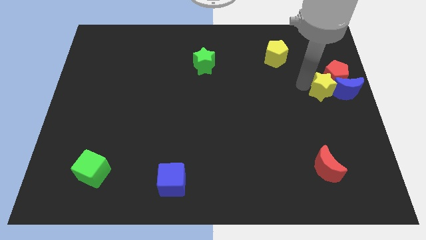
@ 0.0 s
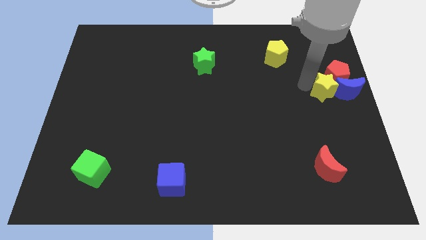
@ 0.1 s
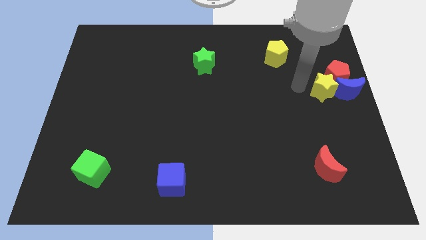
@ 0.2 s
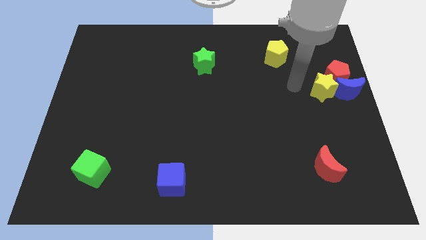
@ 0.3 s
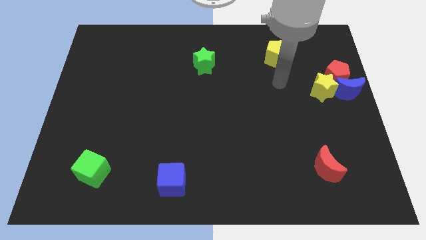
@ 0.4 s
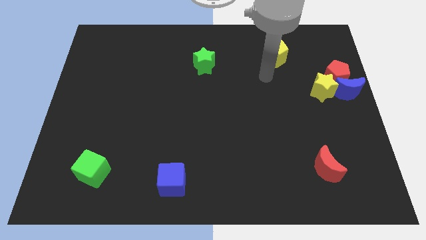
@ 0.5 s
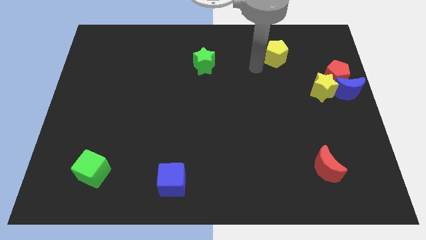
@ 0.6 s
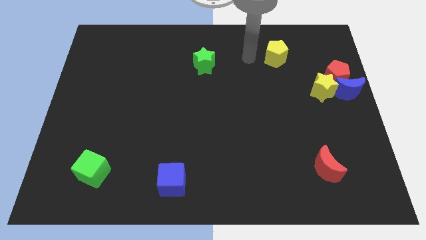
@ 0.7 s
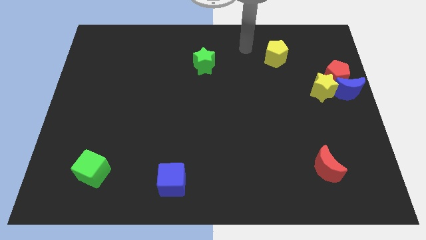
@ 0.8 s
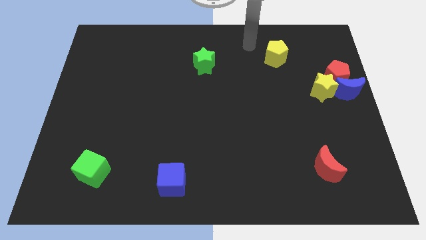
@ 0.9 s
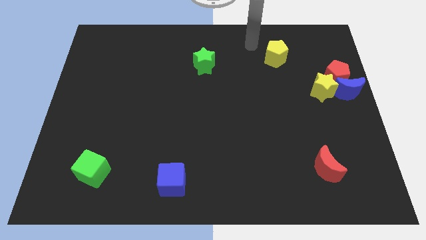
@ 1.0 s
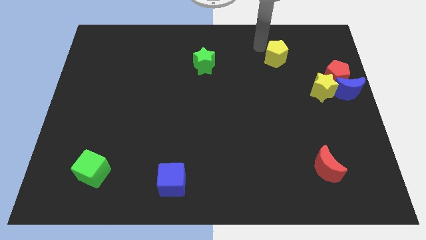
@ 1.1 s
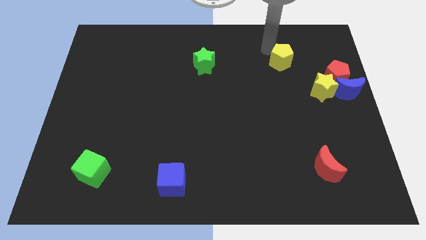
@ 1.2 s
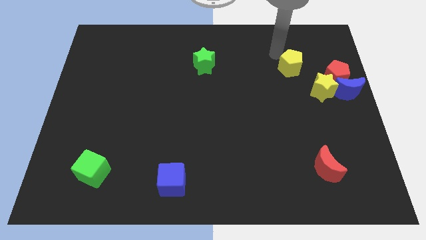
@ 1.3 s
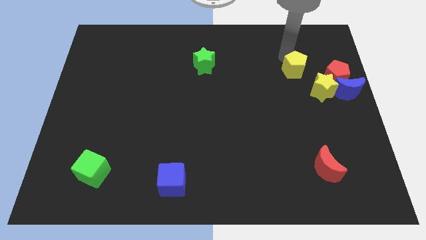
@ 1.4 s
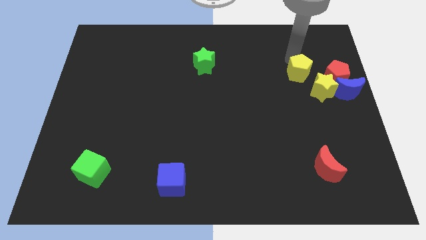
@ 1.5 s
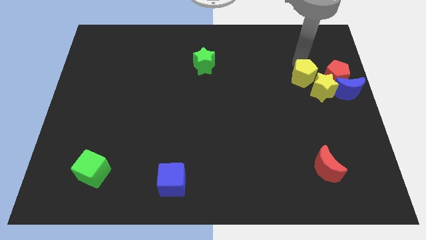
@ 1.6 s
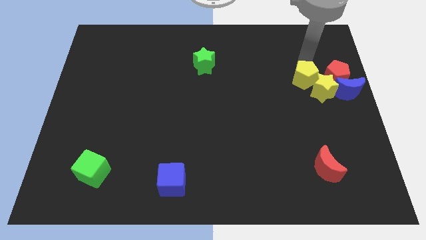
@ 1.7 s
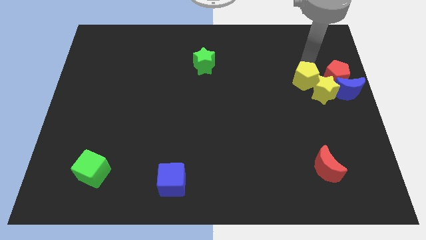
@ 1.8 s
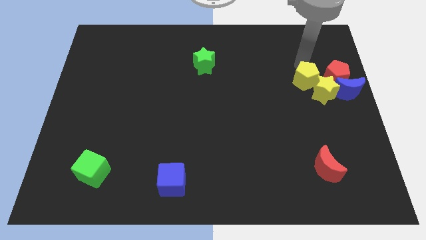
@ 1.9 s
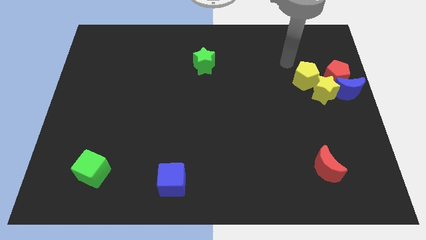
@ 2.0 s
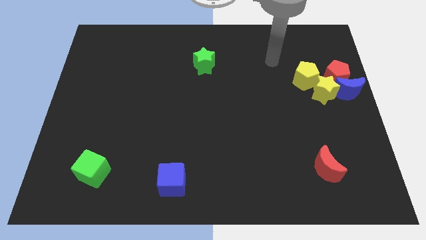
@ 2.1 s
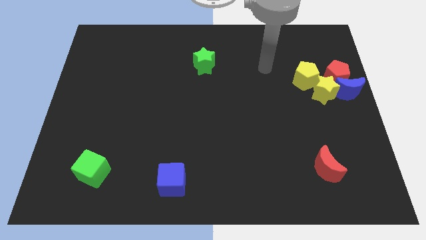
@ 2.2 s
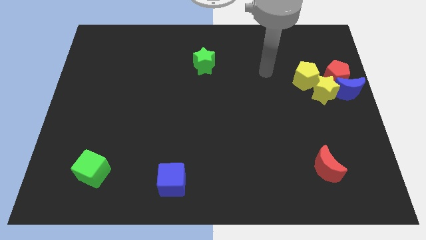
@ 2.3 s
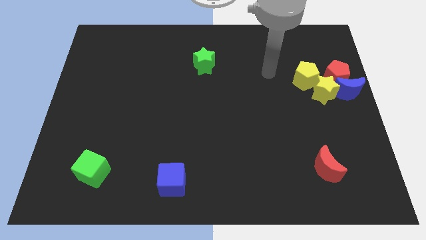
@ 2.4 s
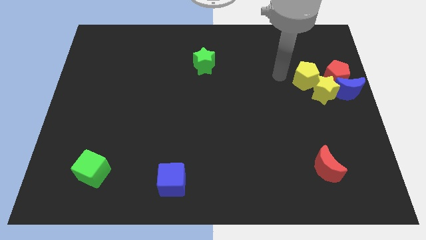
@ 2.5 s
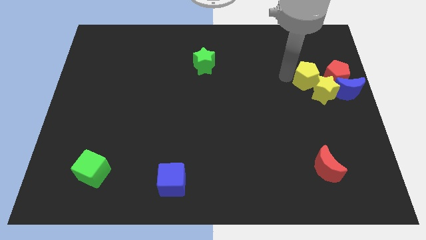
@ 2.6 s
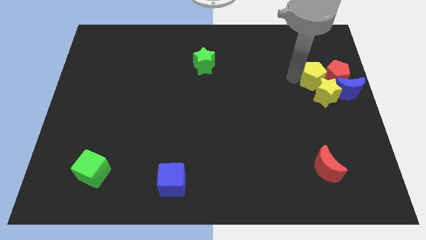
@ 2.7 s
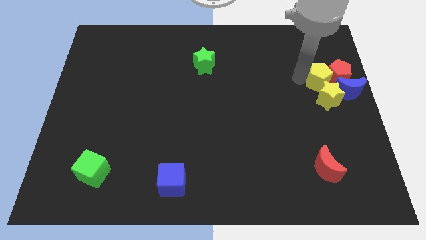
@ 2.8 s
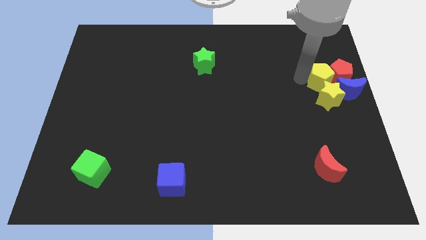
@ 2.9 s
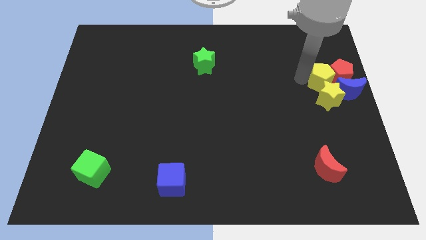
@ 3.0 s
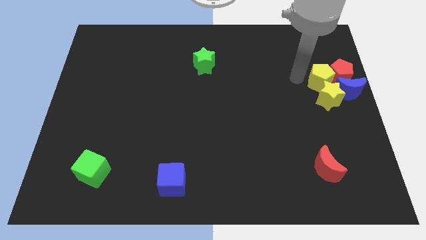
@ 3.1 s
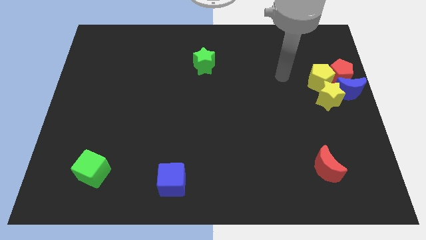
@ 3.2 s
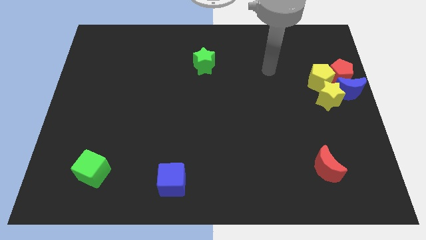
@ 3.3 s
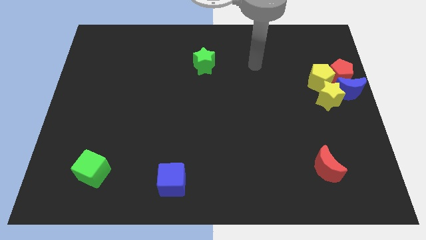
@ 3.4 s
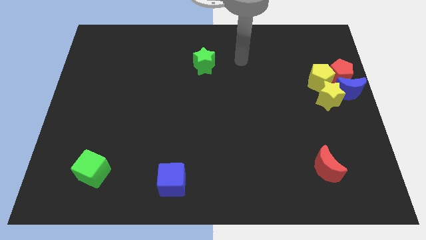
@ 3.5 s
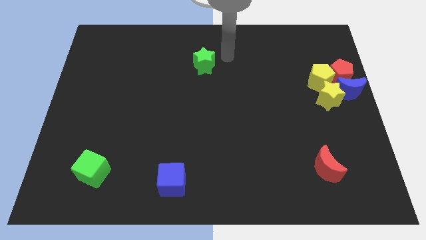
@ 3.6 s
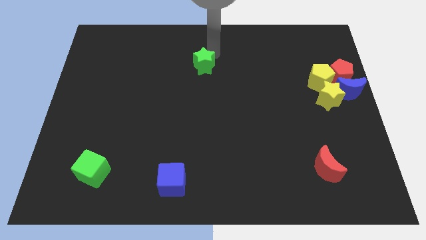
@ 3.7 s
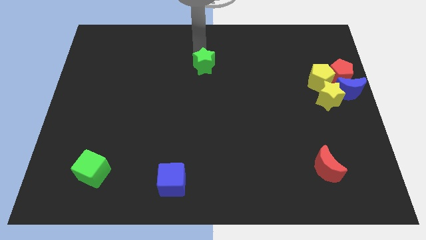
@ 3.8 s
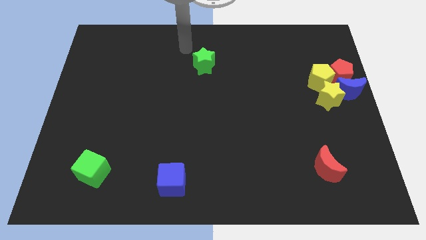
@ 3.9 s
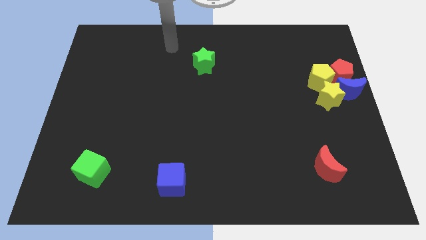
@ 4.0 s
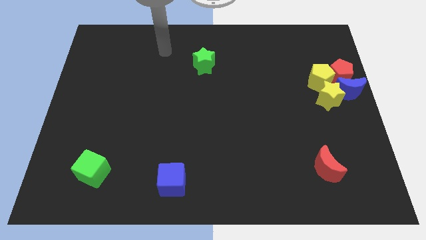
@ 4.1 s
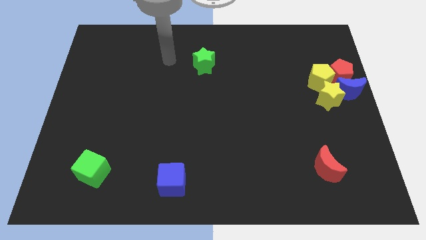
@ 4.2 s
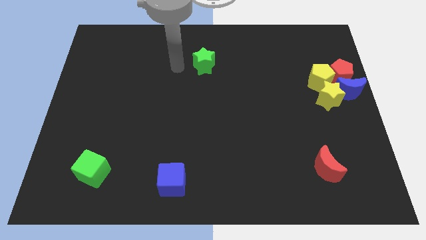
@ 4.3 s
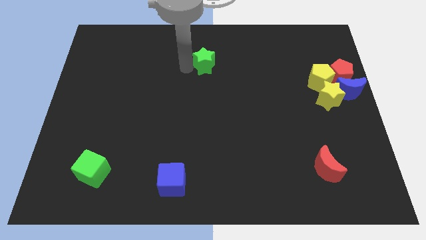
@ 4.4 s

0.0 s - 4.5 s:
move your arm towards the green star

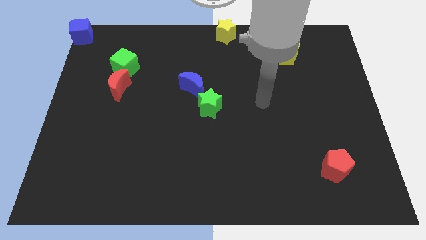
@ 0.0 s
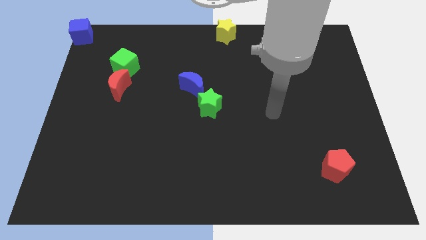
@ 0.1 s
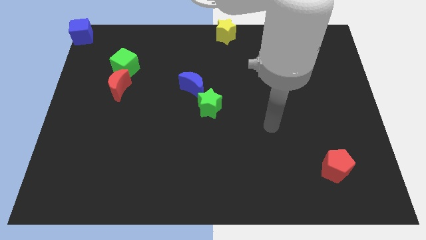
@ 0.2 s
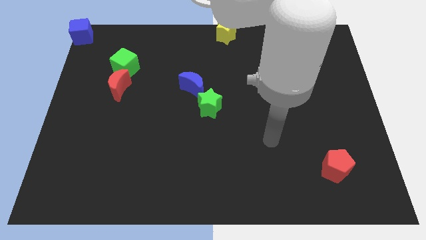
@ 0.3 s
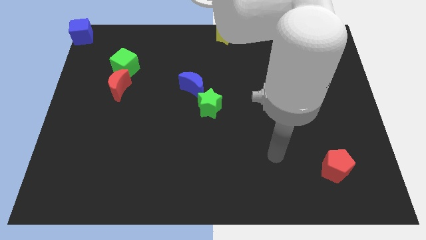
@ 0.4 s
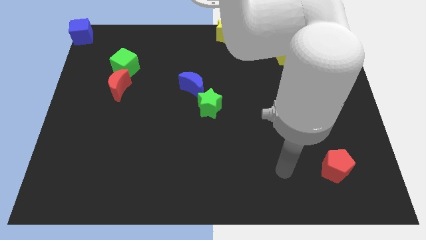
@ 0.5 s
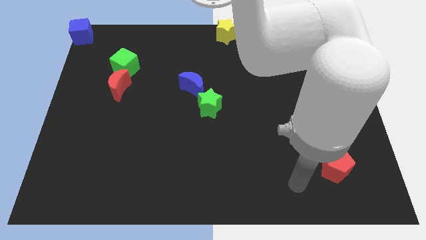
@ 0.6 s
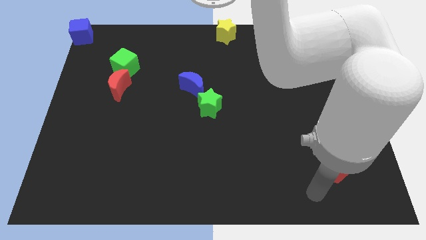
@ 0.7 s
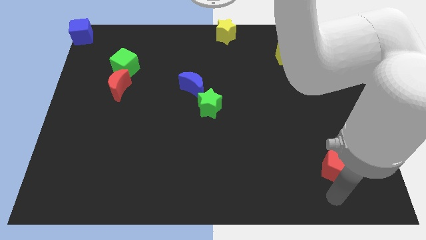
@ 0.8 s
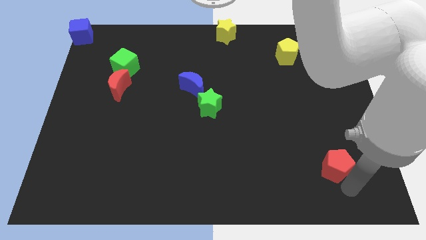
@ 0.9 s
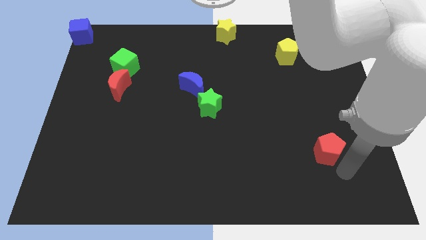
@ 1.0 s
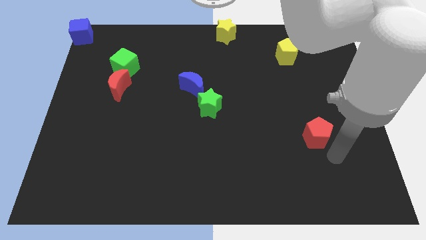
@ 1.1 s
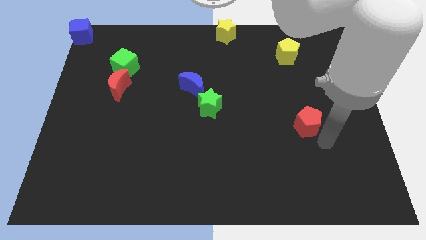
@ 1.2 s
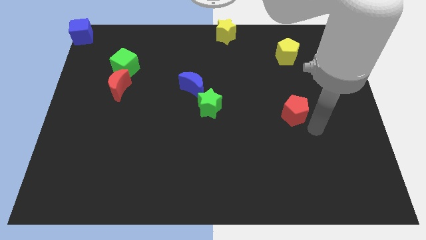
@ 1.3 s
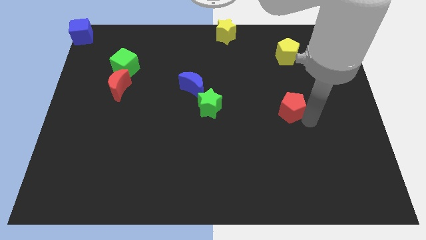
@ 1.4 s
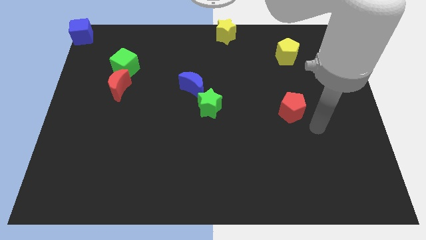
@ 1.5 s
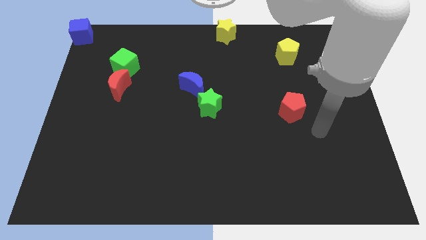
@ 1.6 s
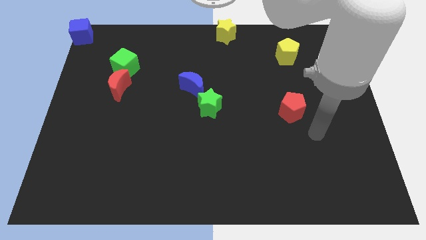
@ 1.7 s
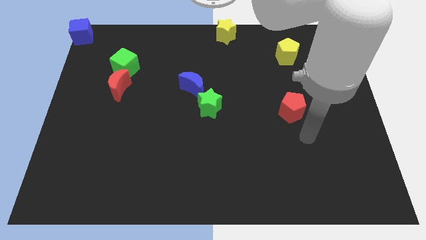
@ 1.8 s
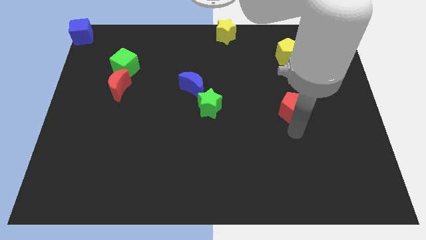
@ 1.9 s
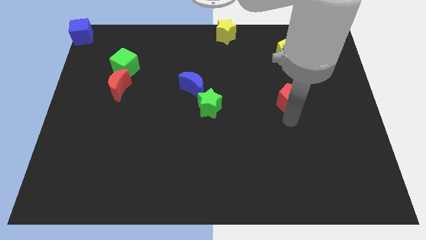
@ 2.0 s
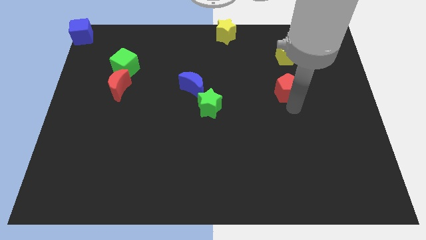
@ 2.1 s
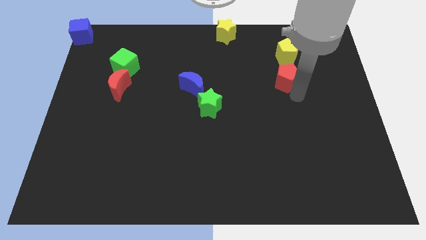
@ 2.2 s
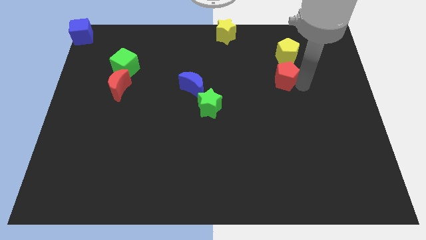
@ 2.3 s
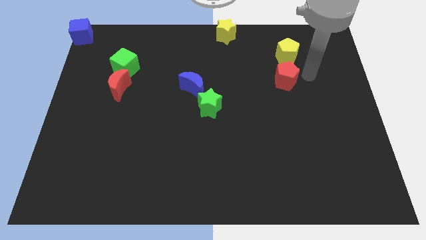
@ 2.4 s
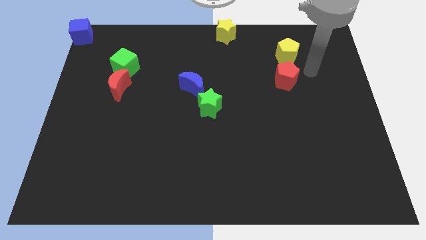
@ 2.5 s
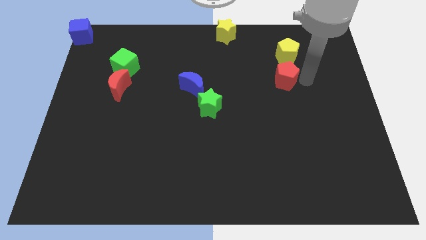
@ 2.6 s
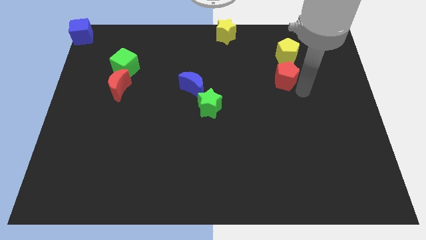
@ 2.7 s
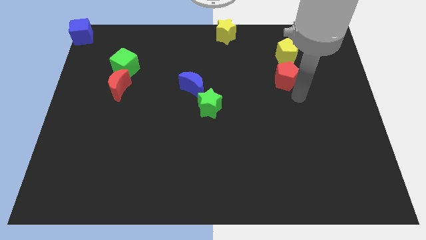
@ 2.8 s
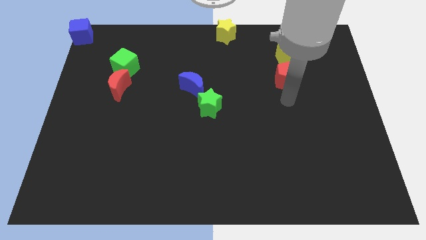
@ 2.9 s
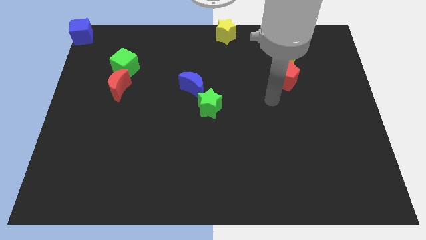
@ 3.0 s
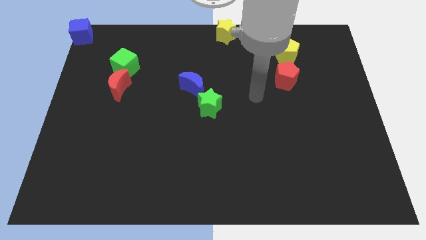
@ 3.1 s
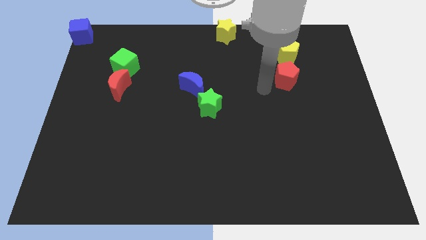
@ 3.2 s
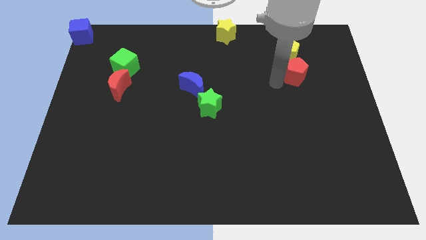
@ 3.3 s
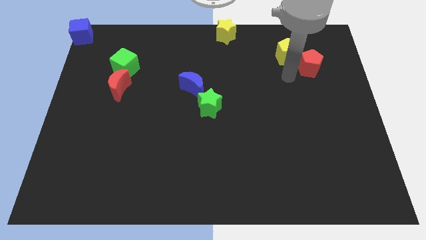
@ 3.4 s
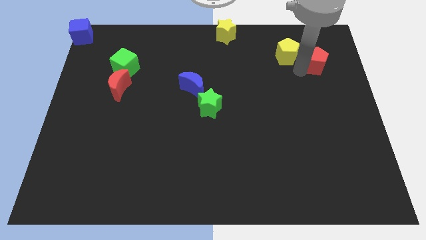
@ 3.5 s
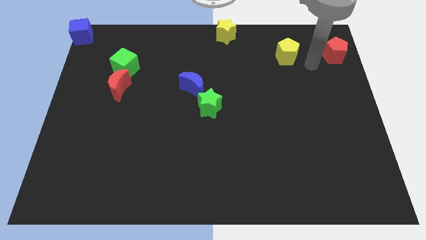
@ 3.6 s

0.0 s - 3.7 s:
place the red pentagon parallel right to the yellow pentagon

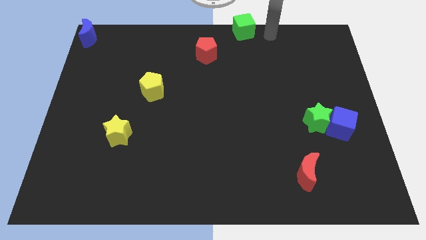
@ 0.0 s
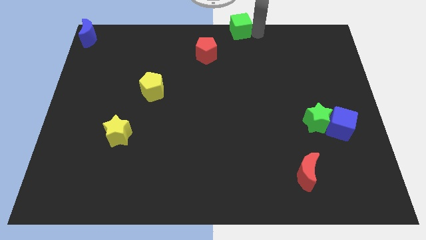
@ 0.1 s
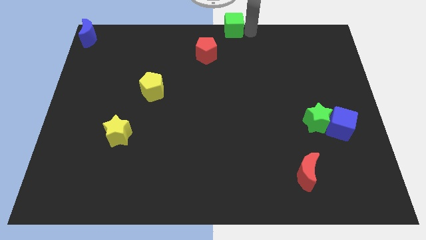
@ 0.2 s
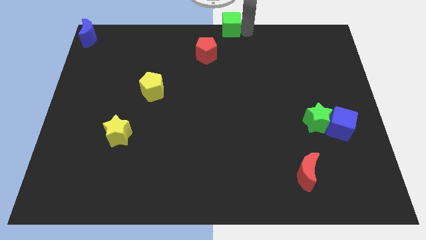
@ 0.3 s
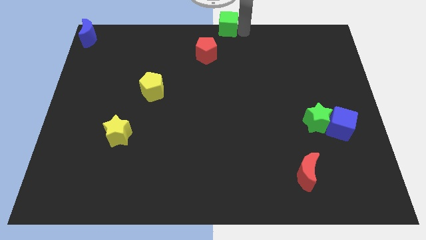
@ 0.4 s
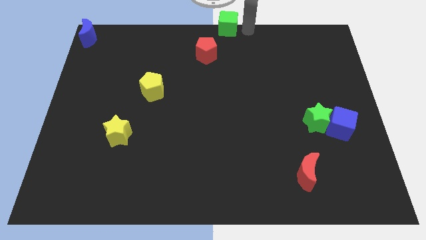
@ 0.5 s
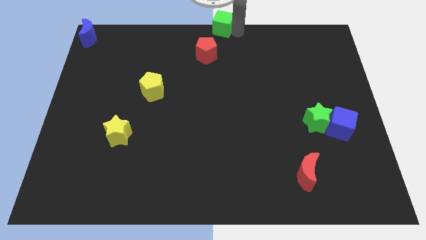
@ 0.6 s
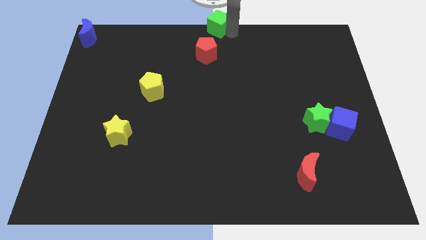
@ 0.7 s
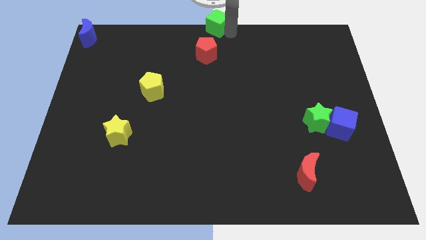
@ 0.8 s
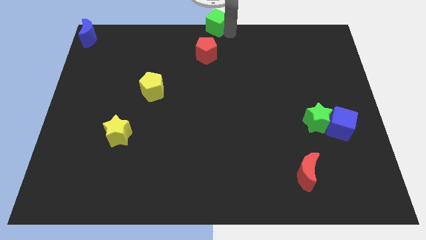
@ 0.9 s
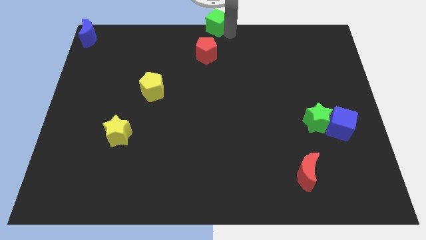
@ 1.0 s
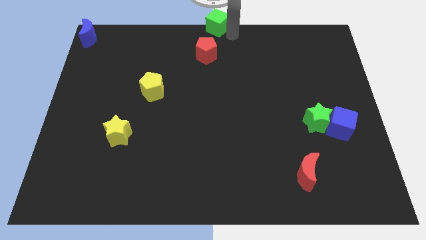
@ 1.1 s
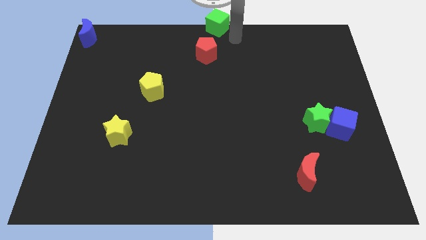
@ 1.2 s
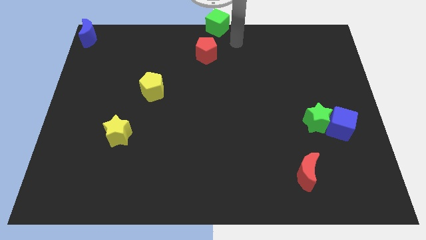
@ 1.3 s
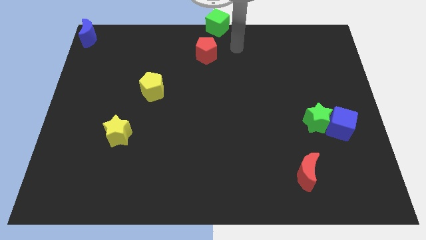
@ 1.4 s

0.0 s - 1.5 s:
move the green cube towards the top center of the board
